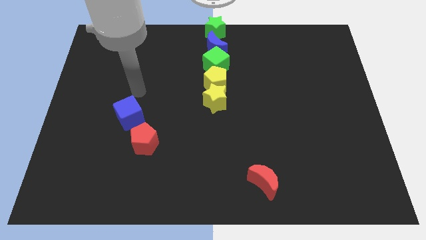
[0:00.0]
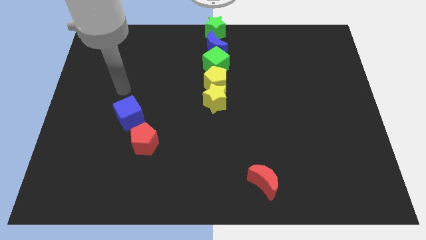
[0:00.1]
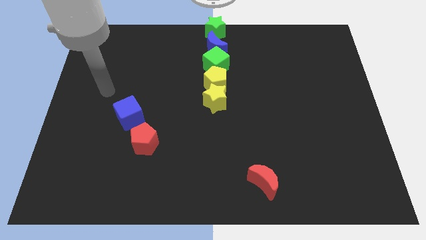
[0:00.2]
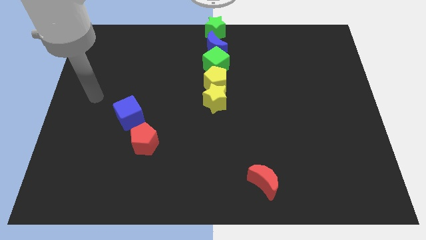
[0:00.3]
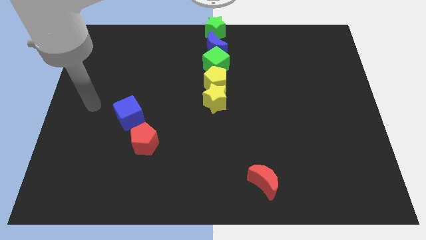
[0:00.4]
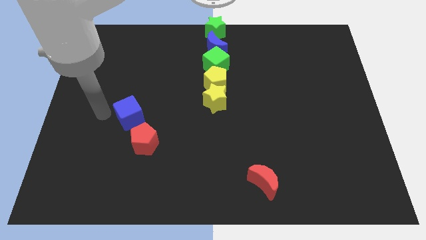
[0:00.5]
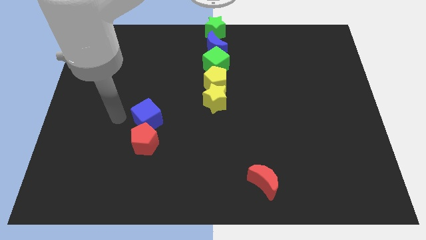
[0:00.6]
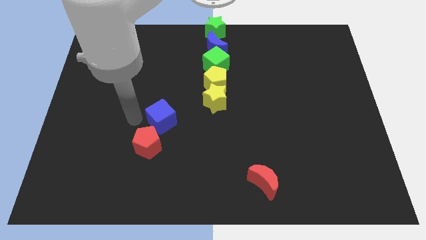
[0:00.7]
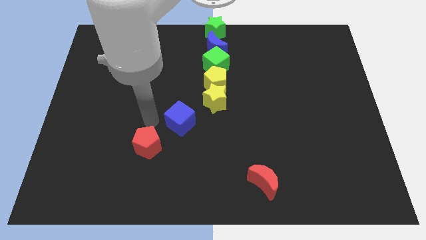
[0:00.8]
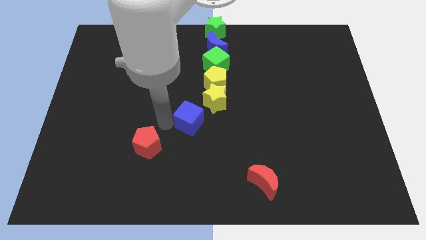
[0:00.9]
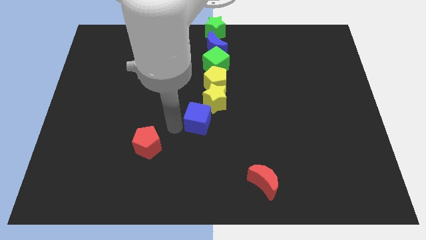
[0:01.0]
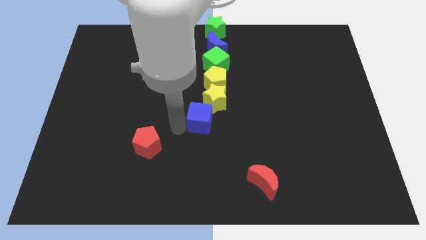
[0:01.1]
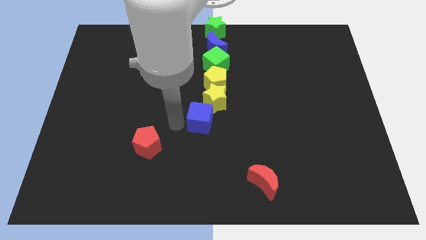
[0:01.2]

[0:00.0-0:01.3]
separate blue cube from the red pentagon

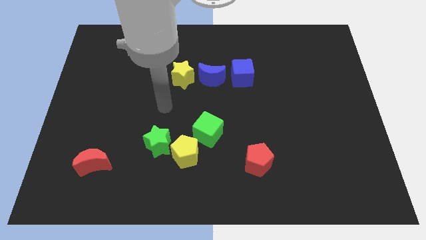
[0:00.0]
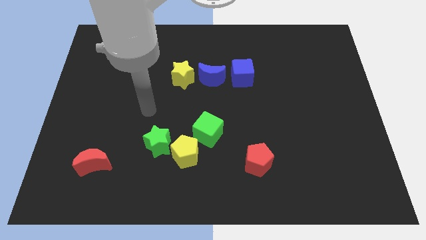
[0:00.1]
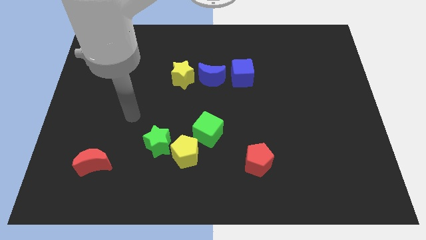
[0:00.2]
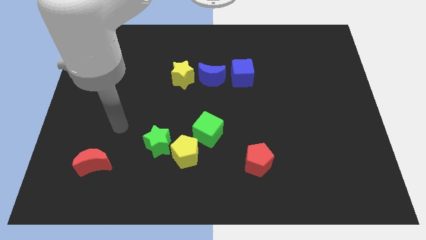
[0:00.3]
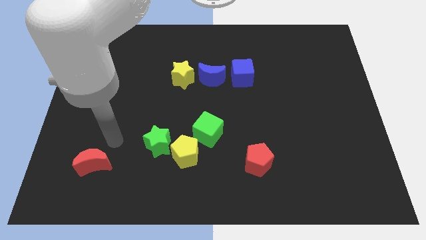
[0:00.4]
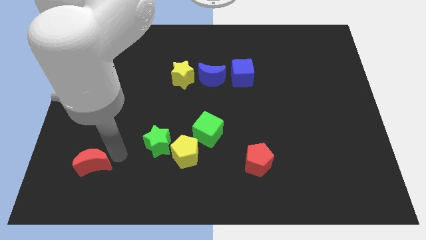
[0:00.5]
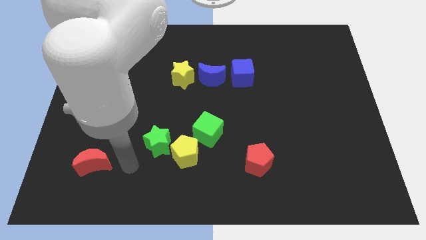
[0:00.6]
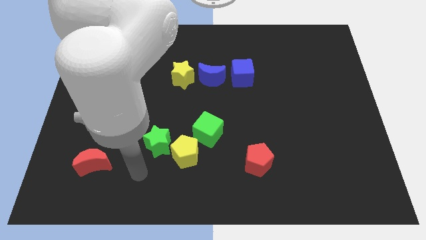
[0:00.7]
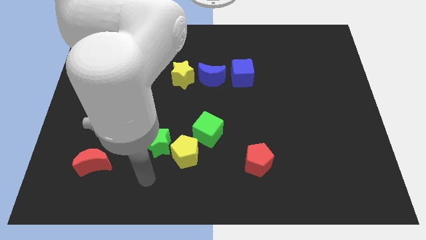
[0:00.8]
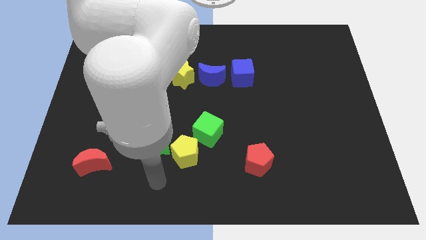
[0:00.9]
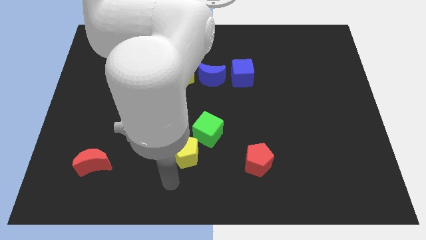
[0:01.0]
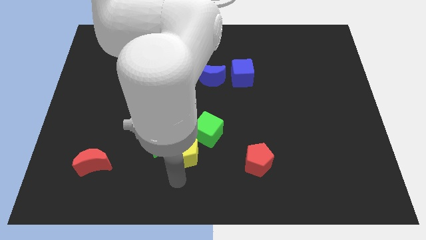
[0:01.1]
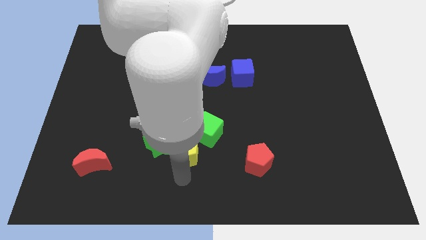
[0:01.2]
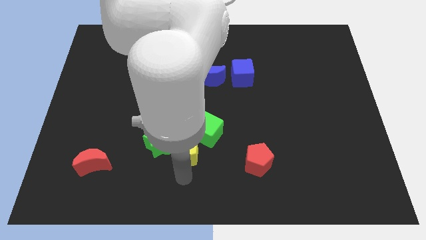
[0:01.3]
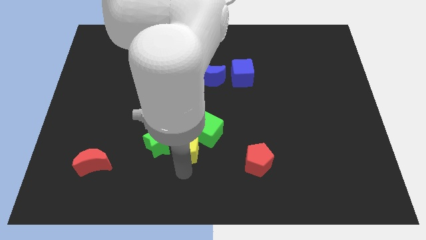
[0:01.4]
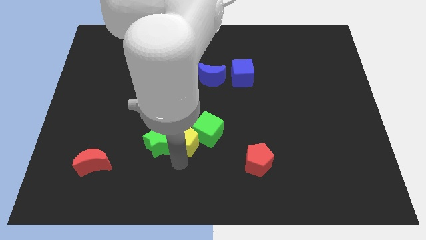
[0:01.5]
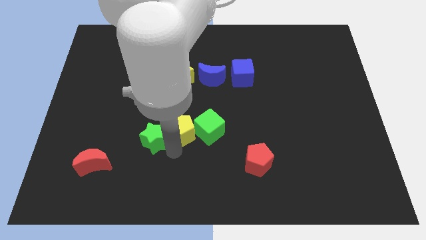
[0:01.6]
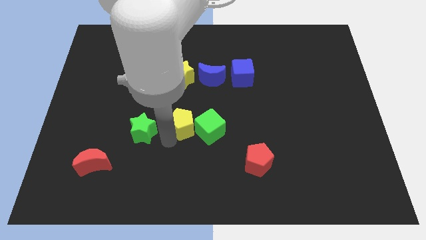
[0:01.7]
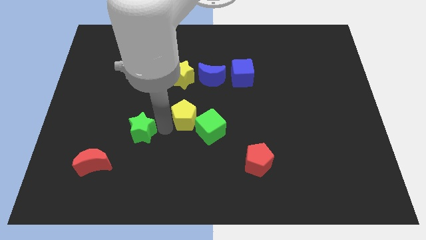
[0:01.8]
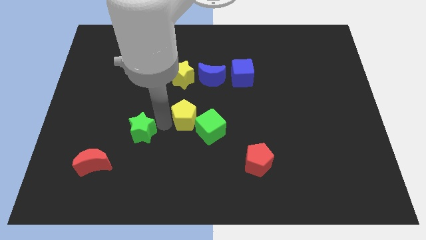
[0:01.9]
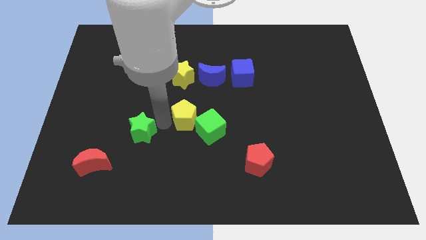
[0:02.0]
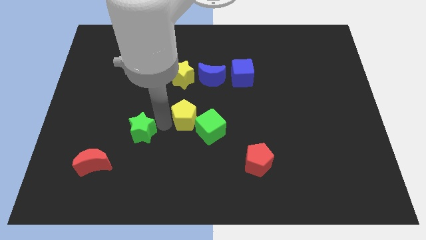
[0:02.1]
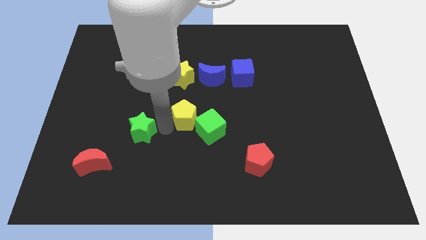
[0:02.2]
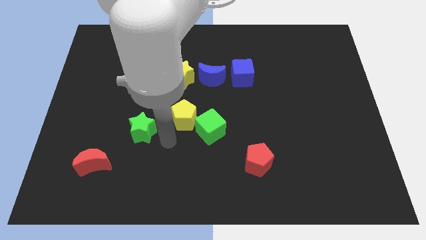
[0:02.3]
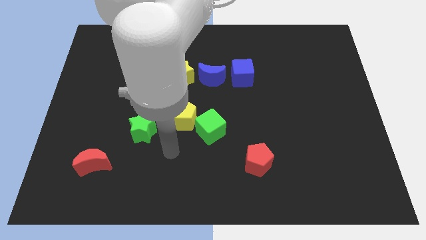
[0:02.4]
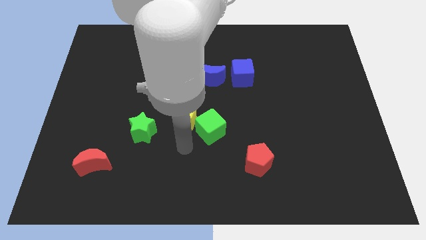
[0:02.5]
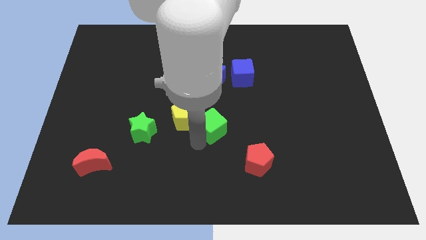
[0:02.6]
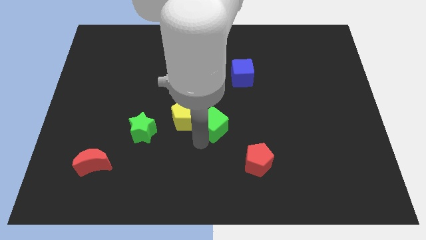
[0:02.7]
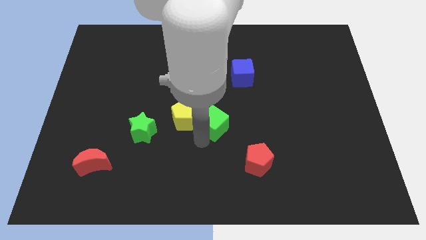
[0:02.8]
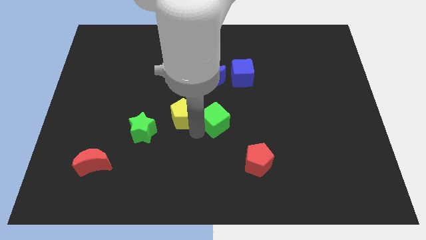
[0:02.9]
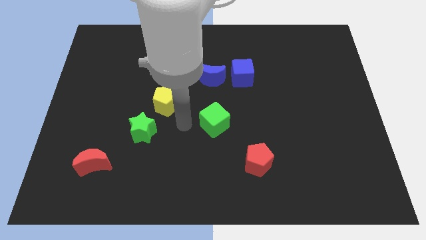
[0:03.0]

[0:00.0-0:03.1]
separate yellow pentagon from green blocks

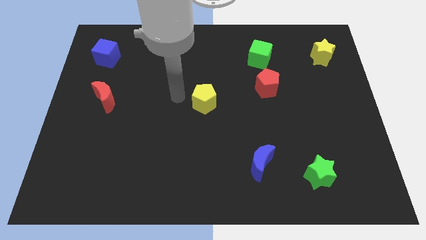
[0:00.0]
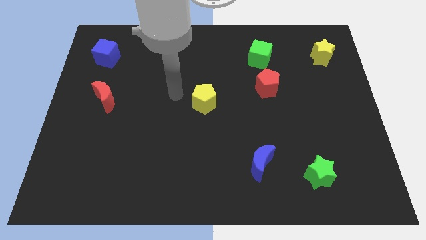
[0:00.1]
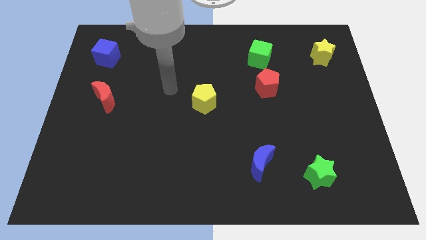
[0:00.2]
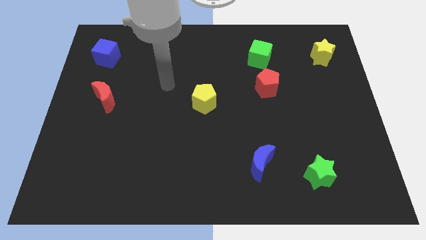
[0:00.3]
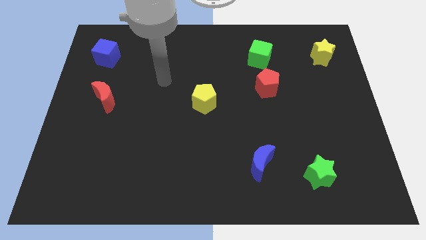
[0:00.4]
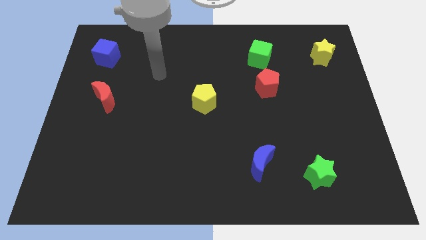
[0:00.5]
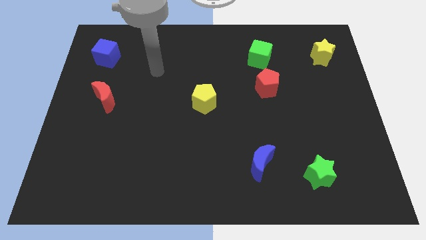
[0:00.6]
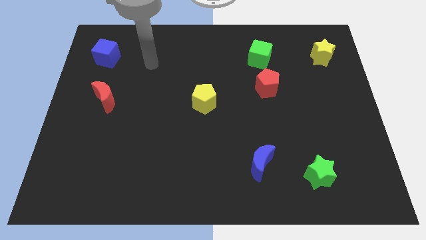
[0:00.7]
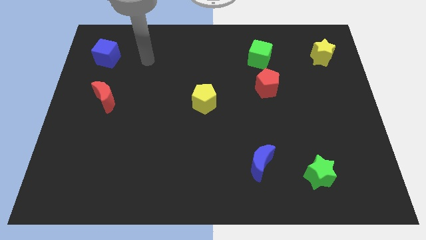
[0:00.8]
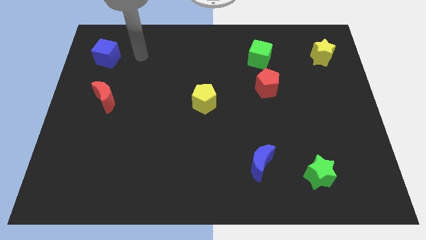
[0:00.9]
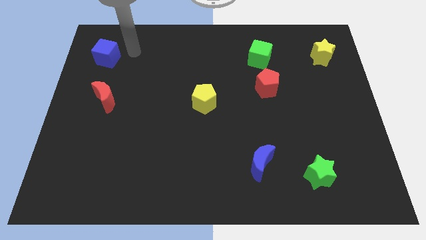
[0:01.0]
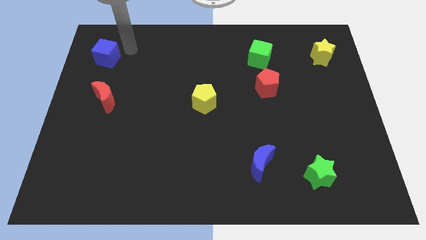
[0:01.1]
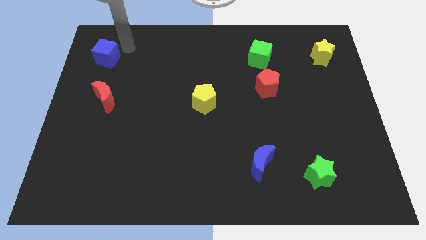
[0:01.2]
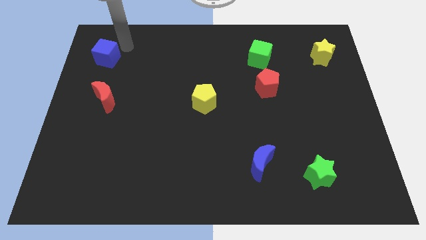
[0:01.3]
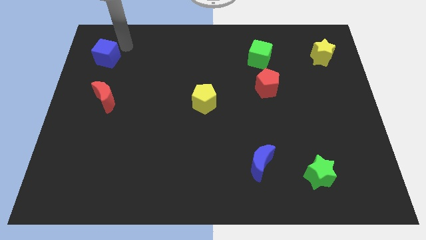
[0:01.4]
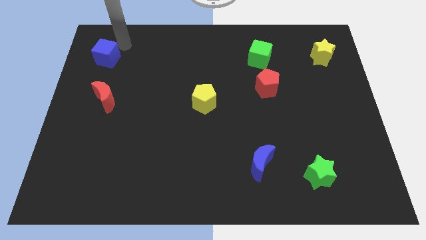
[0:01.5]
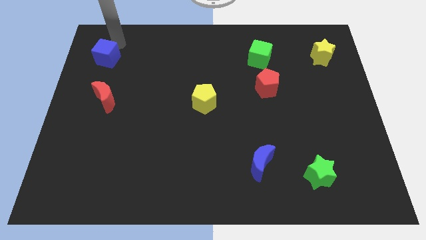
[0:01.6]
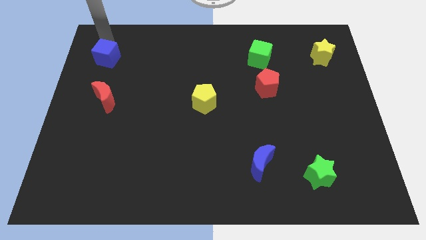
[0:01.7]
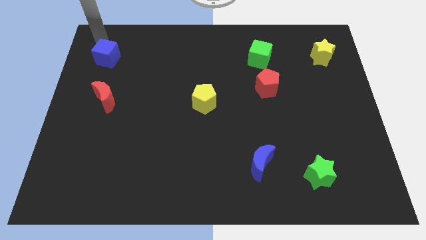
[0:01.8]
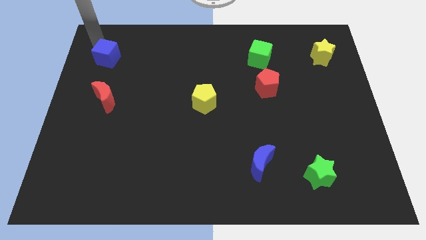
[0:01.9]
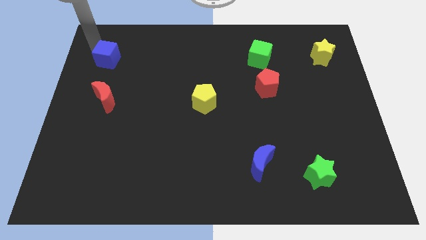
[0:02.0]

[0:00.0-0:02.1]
place the arm near blue cube

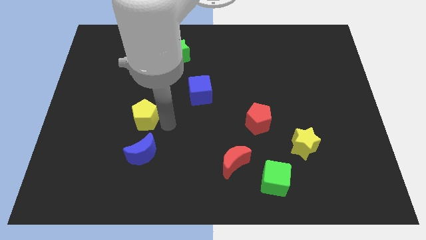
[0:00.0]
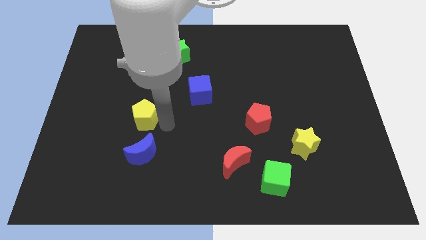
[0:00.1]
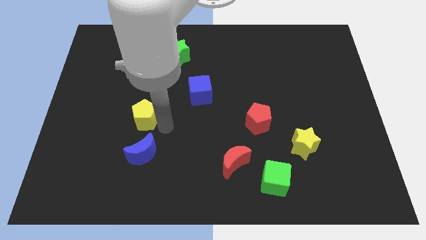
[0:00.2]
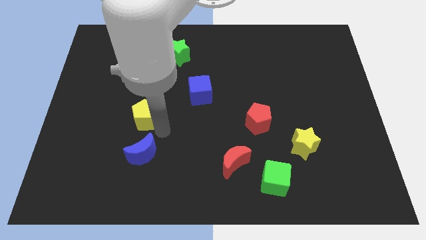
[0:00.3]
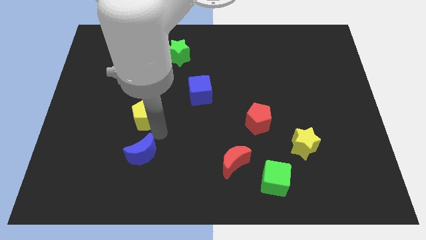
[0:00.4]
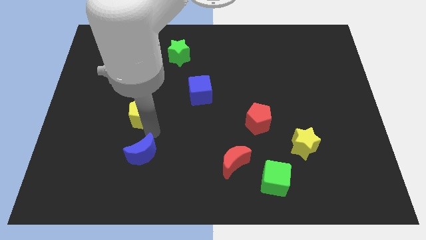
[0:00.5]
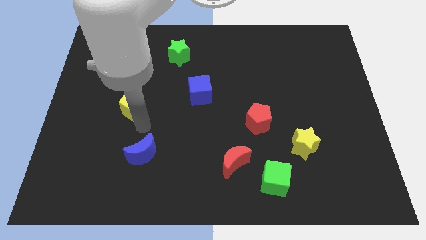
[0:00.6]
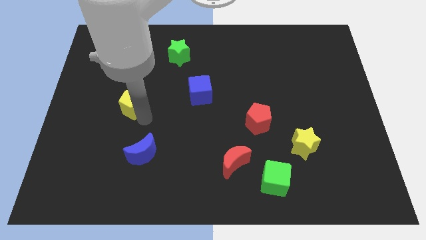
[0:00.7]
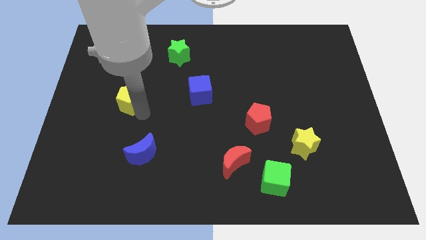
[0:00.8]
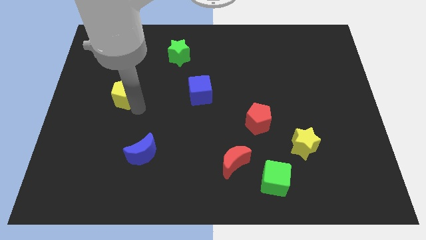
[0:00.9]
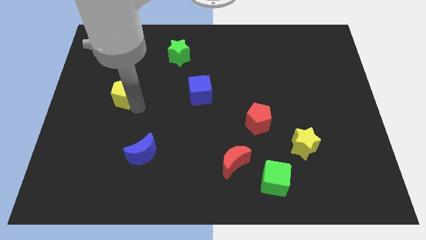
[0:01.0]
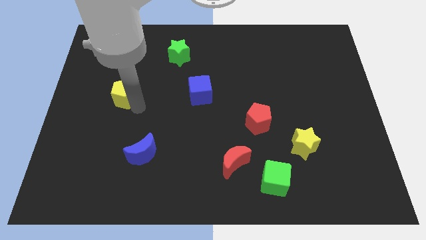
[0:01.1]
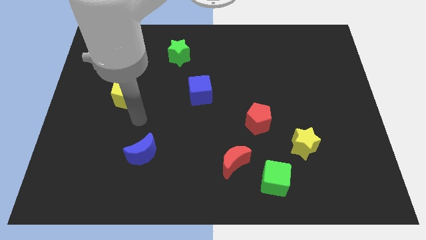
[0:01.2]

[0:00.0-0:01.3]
move the yellow pentagon to the left of the blue cube

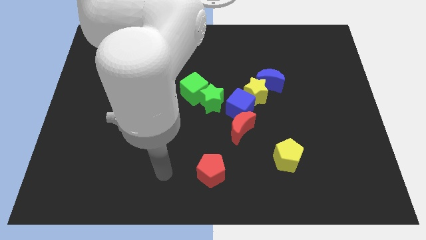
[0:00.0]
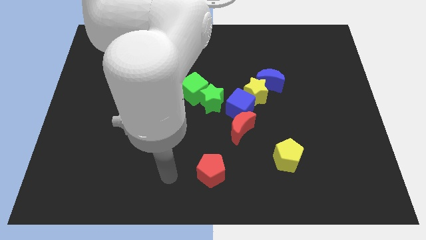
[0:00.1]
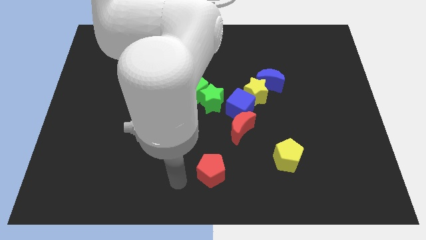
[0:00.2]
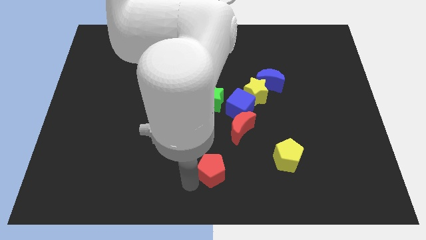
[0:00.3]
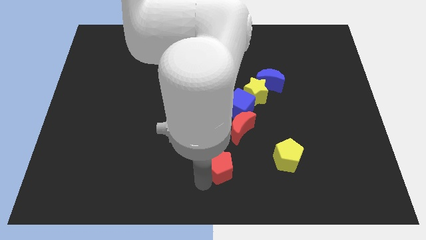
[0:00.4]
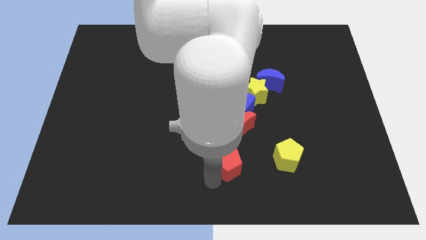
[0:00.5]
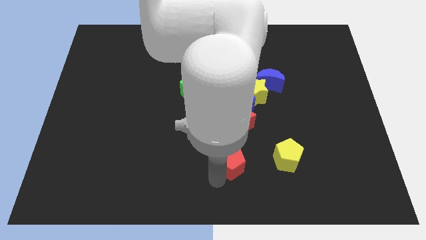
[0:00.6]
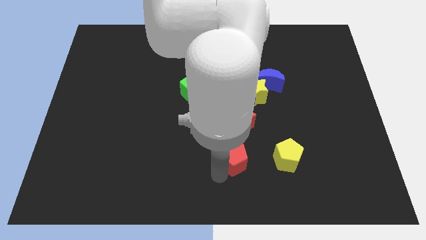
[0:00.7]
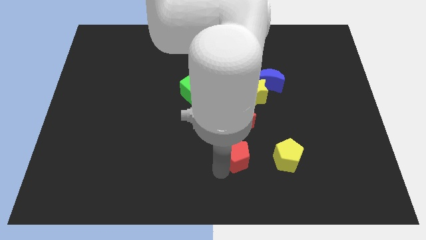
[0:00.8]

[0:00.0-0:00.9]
move the red pentagon below the red moon

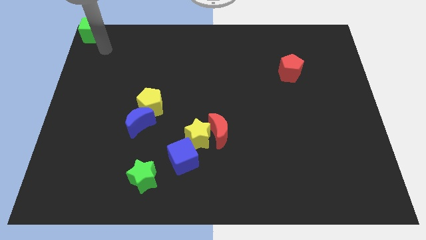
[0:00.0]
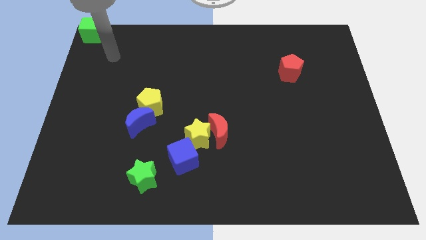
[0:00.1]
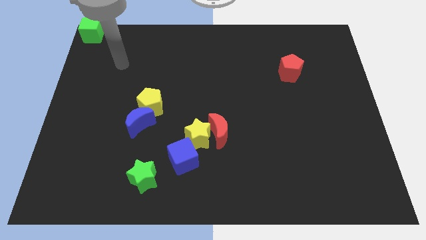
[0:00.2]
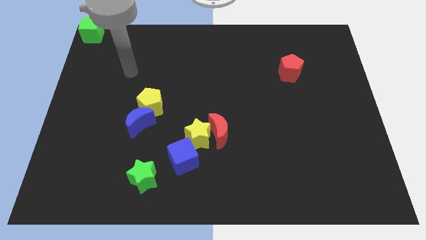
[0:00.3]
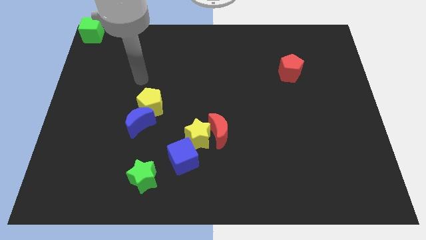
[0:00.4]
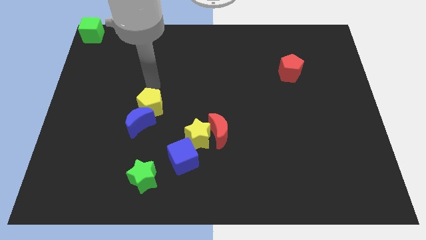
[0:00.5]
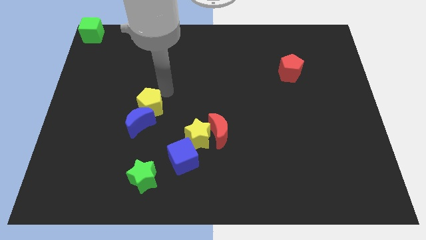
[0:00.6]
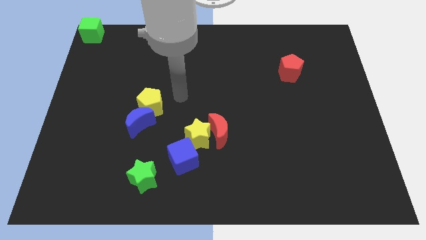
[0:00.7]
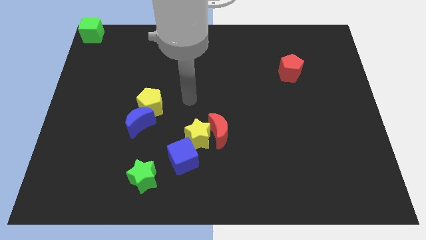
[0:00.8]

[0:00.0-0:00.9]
place your hand to right side of the yellow pentagon
